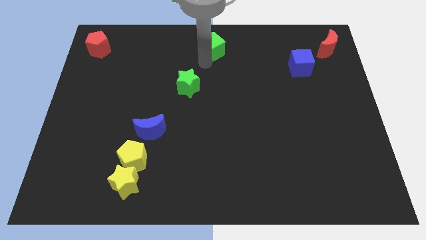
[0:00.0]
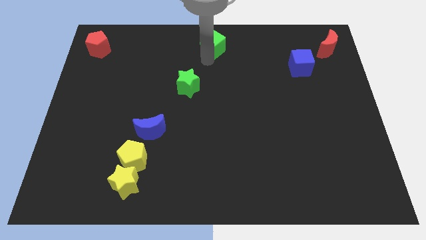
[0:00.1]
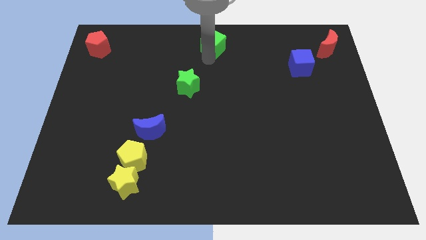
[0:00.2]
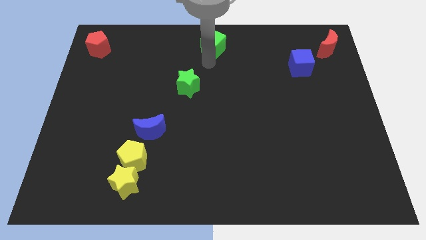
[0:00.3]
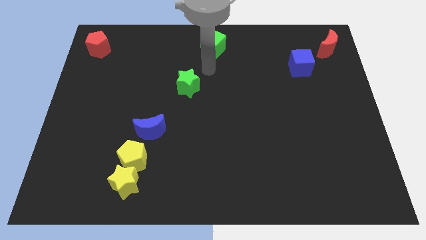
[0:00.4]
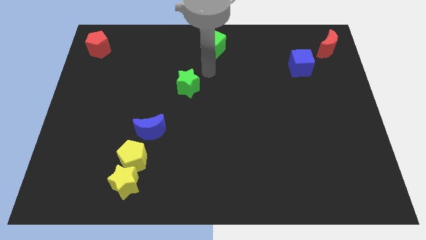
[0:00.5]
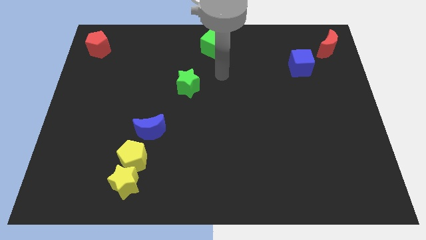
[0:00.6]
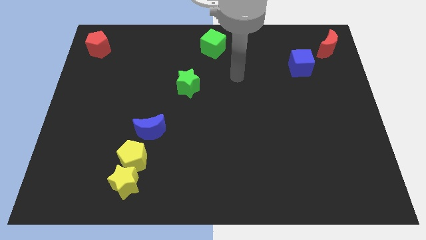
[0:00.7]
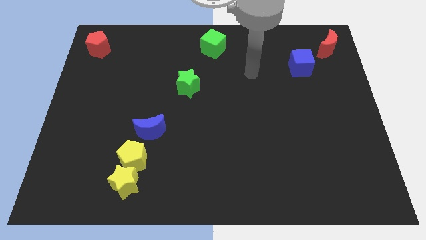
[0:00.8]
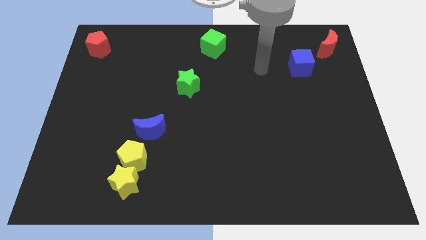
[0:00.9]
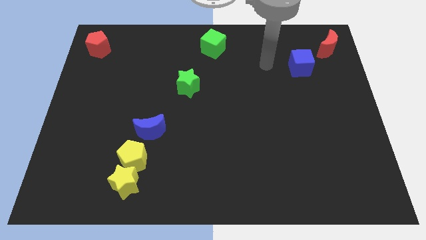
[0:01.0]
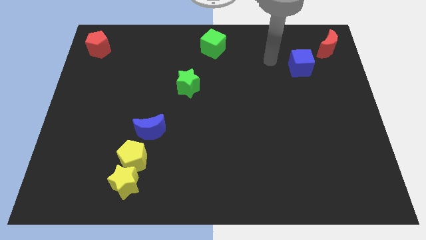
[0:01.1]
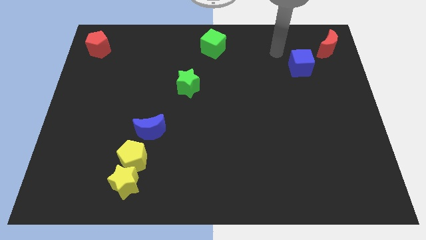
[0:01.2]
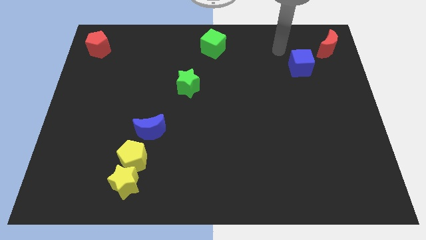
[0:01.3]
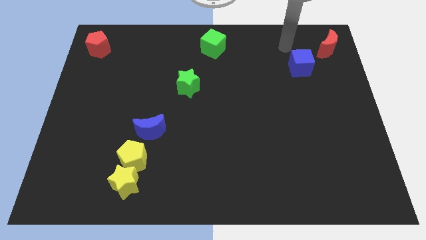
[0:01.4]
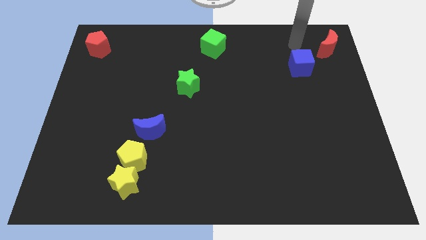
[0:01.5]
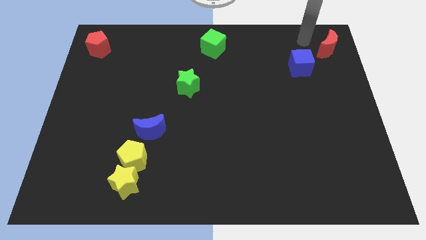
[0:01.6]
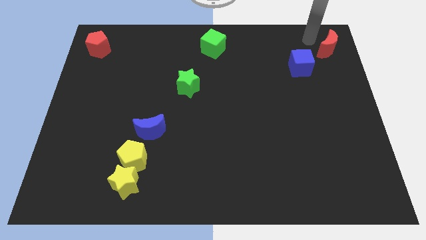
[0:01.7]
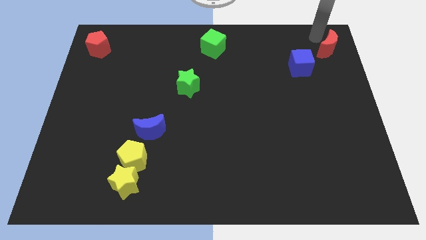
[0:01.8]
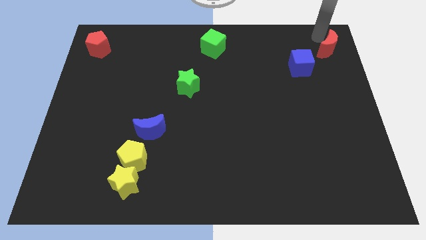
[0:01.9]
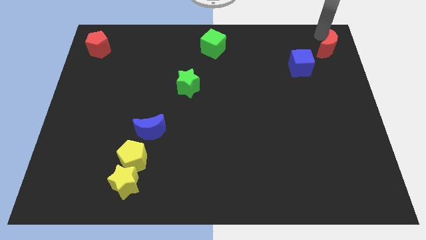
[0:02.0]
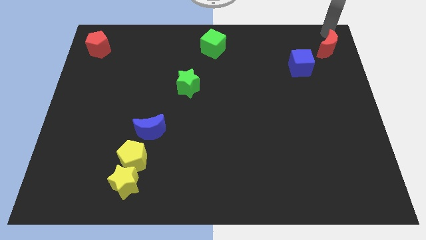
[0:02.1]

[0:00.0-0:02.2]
move the arm at the top right corner

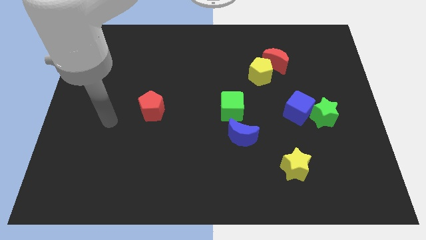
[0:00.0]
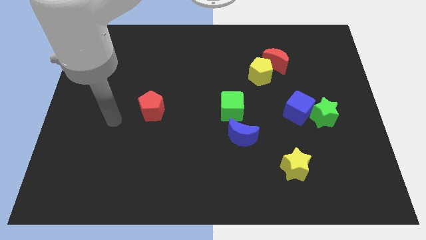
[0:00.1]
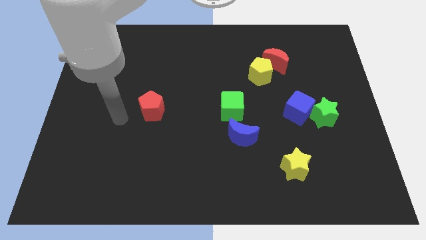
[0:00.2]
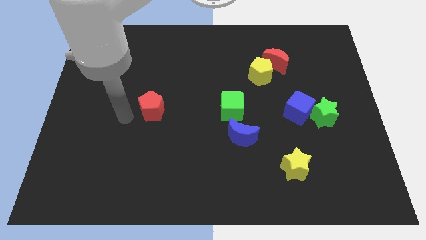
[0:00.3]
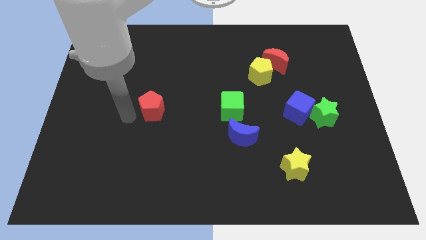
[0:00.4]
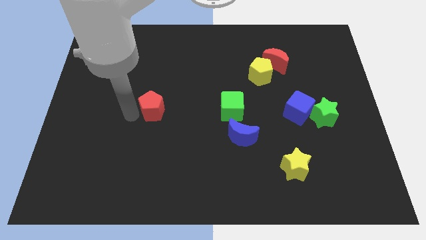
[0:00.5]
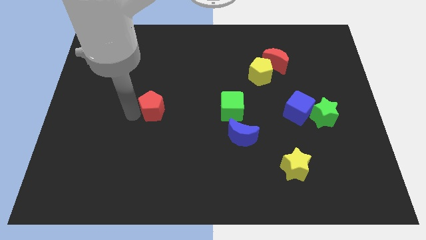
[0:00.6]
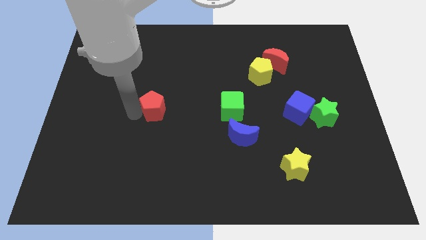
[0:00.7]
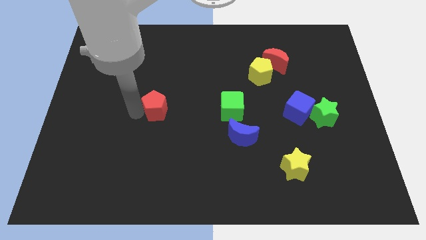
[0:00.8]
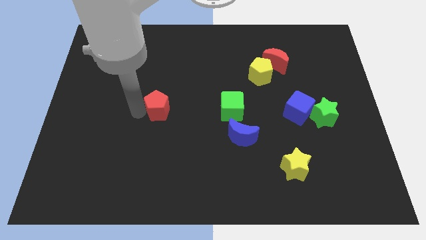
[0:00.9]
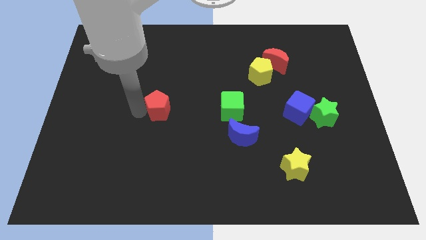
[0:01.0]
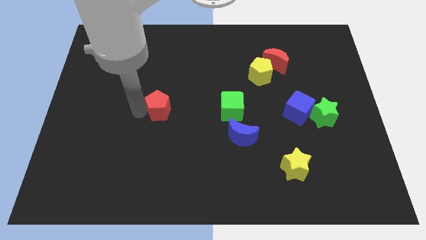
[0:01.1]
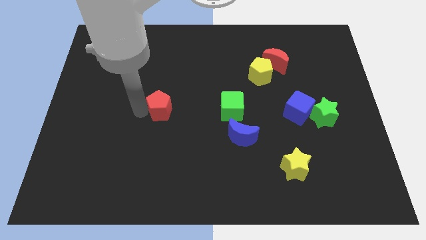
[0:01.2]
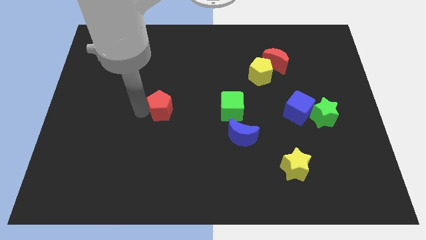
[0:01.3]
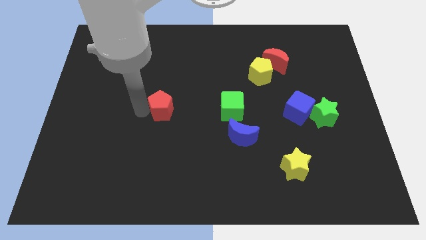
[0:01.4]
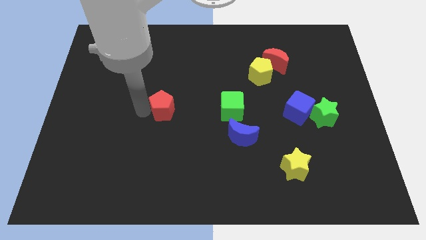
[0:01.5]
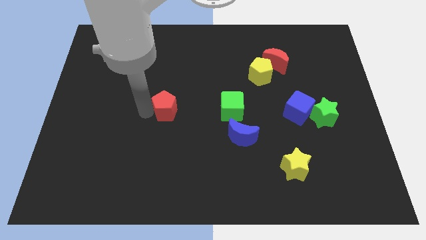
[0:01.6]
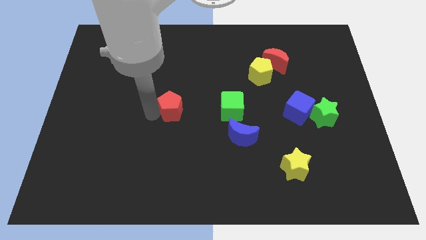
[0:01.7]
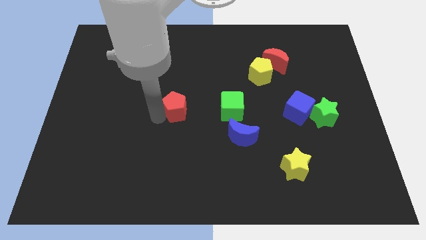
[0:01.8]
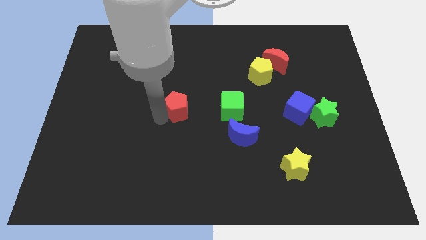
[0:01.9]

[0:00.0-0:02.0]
move the red pentagon towards the green cube

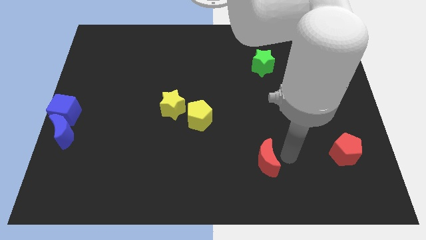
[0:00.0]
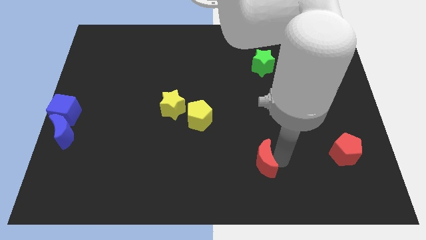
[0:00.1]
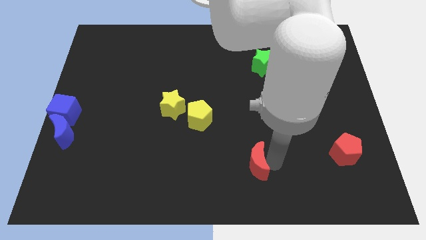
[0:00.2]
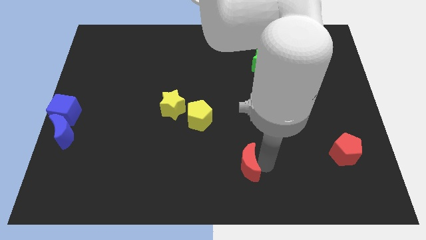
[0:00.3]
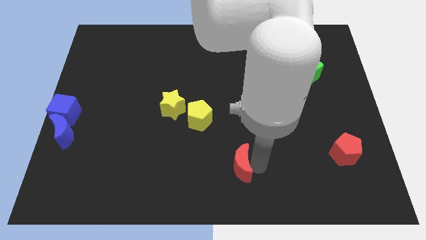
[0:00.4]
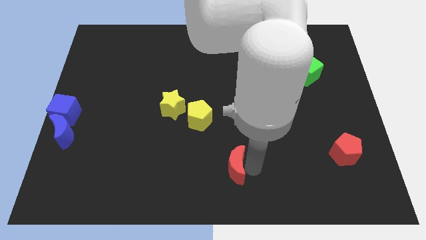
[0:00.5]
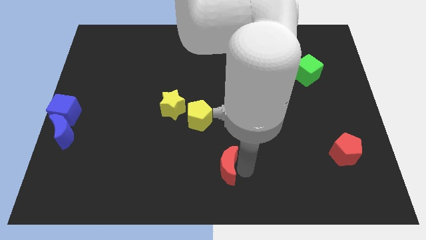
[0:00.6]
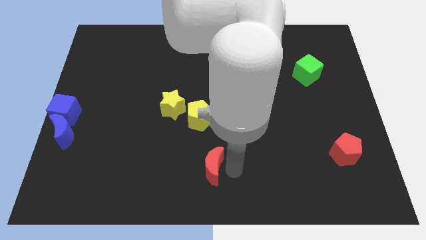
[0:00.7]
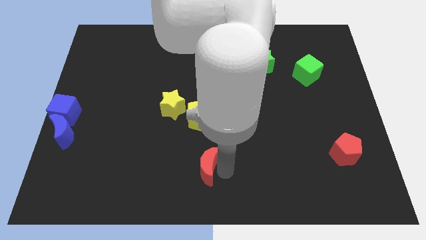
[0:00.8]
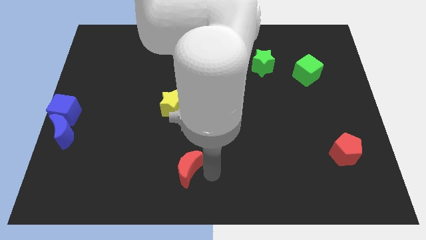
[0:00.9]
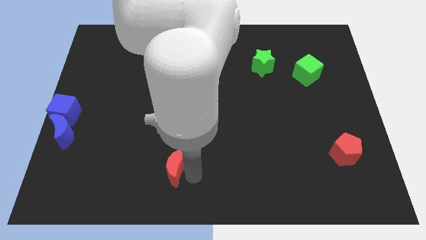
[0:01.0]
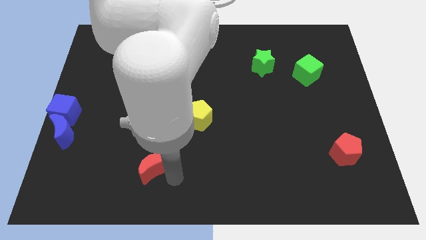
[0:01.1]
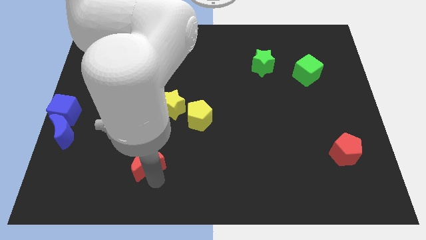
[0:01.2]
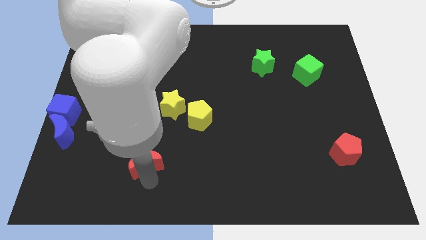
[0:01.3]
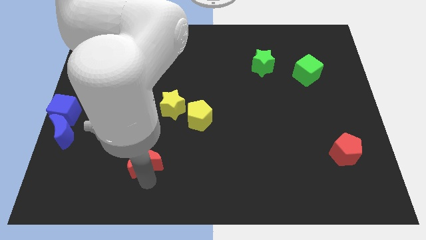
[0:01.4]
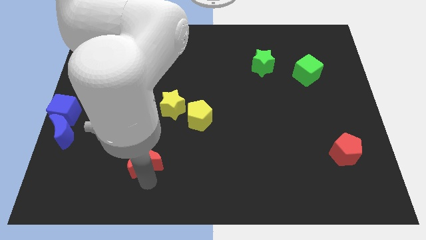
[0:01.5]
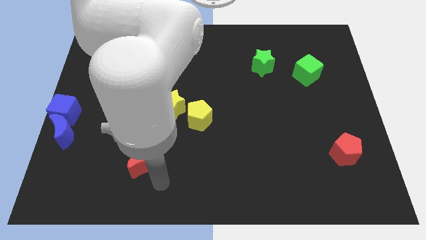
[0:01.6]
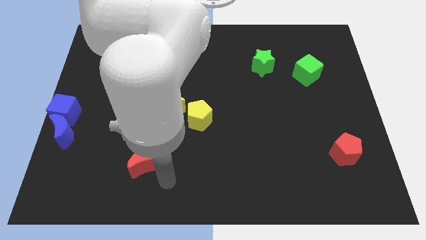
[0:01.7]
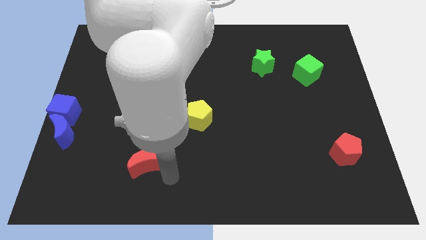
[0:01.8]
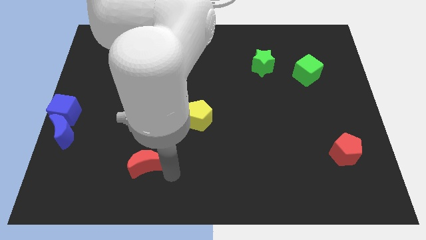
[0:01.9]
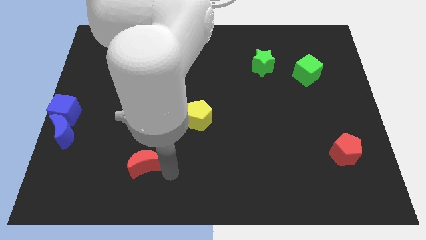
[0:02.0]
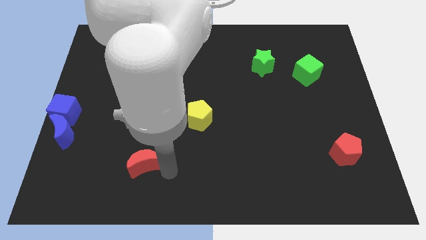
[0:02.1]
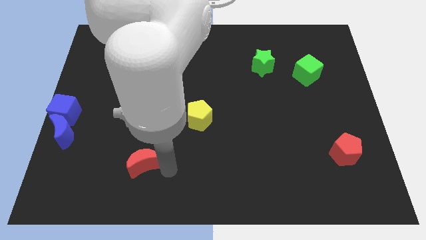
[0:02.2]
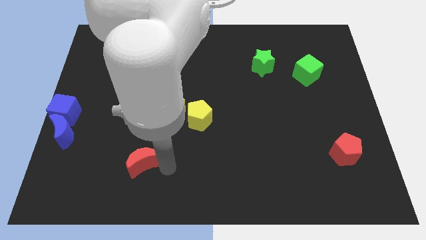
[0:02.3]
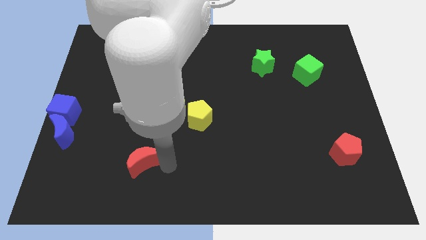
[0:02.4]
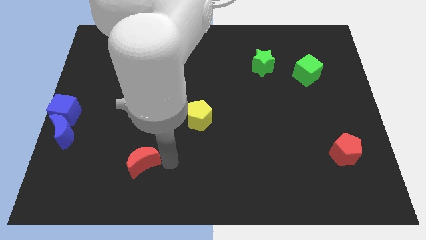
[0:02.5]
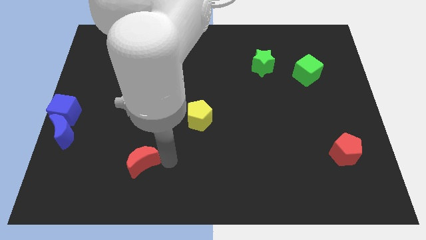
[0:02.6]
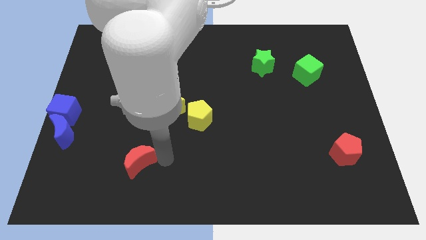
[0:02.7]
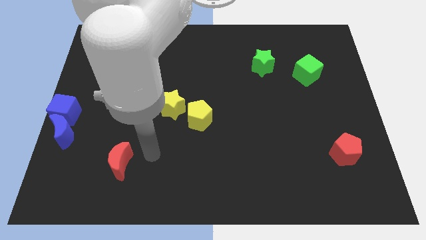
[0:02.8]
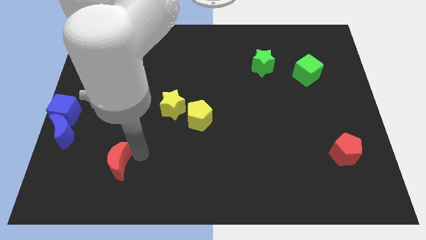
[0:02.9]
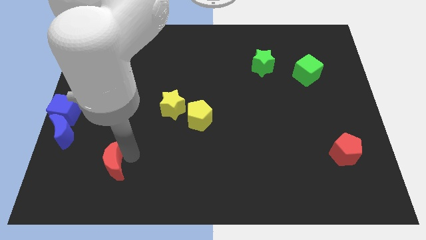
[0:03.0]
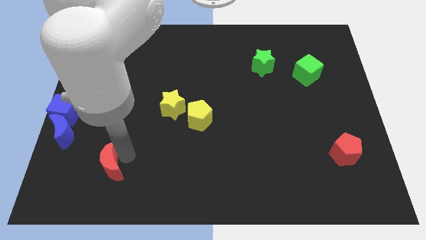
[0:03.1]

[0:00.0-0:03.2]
push the red crescent diagonally on the bottom right side of the blue crescent

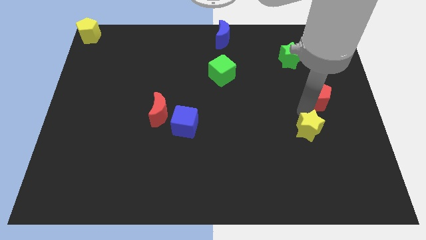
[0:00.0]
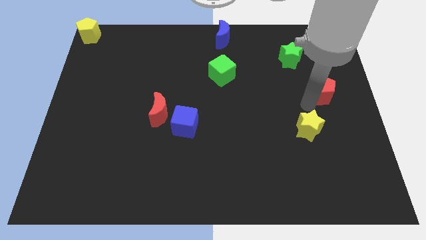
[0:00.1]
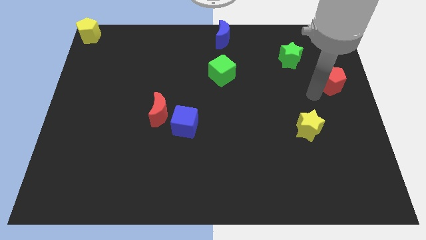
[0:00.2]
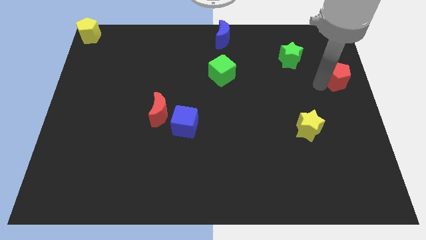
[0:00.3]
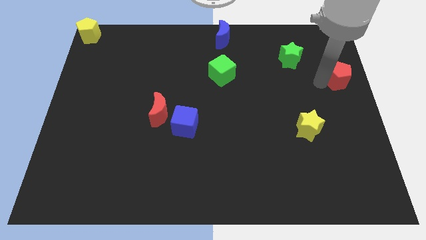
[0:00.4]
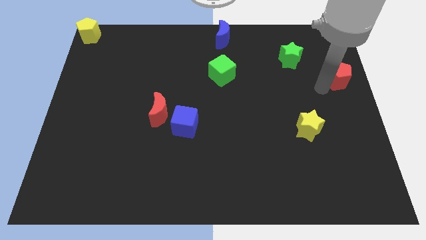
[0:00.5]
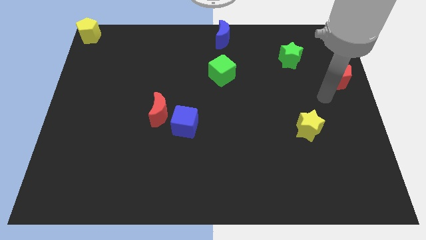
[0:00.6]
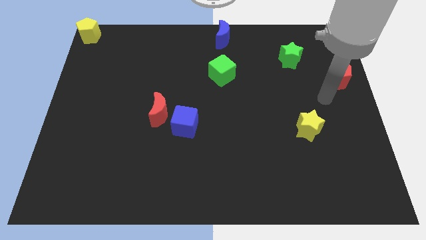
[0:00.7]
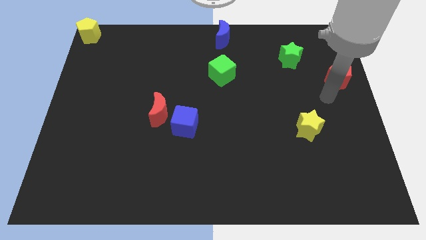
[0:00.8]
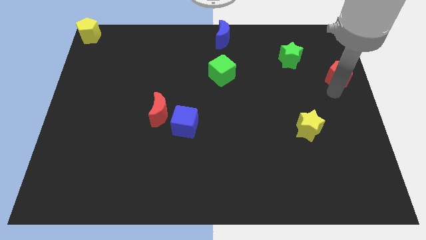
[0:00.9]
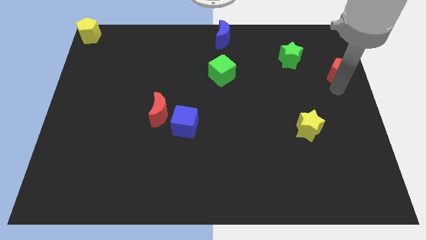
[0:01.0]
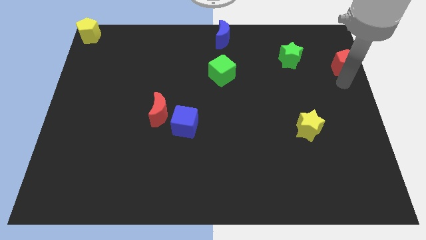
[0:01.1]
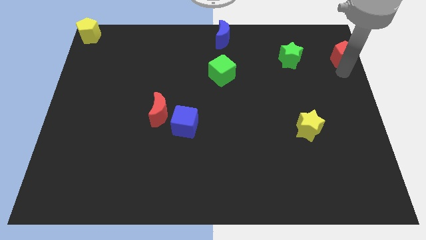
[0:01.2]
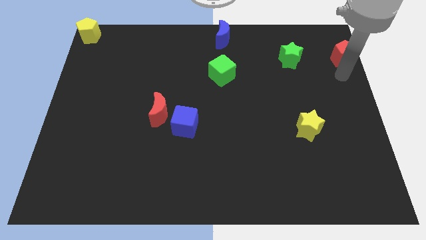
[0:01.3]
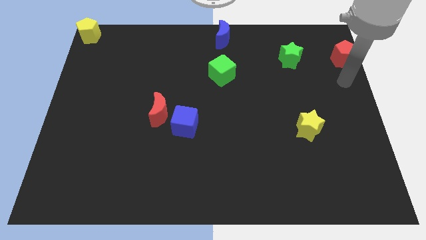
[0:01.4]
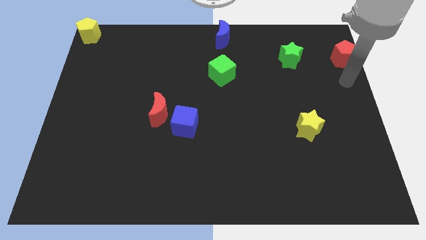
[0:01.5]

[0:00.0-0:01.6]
move the red pentagon right to the green star

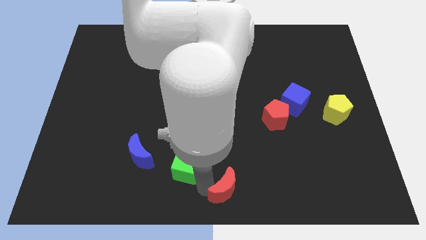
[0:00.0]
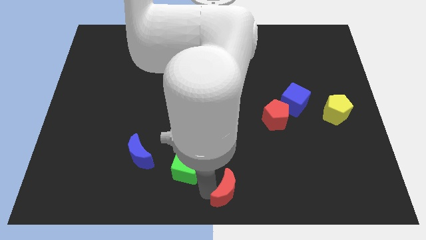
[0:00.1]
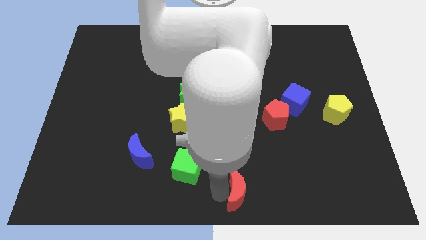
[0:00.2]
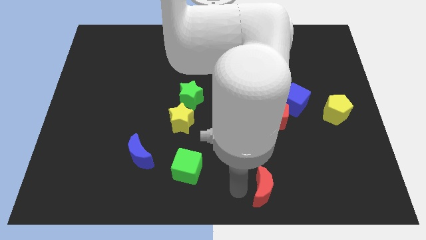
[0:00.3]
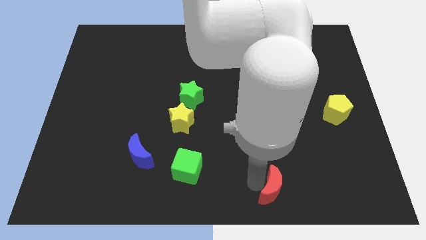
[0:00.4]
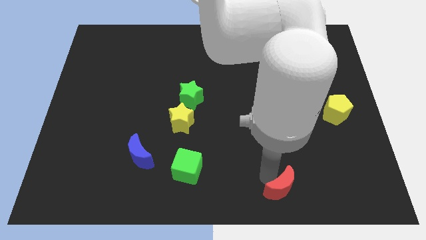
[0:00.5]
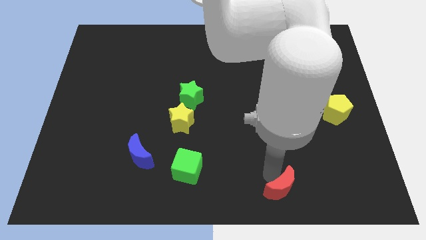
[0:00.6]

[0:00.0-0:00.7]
move the red crescent to the bottom of the red pentagon
